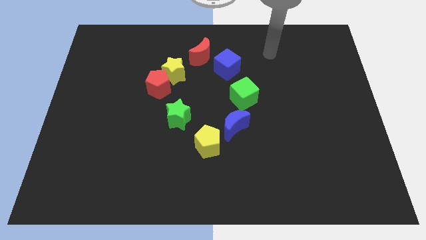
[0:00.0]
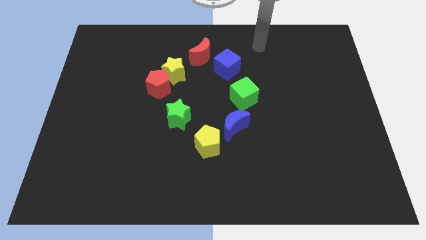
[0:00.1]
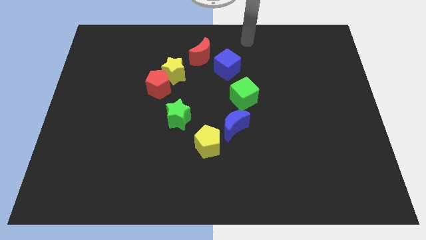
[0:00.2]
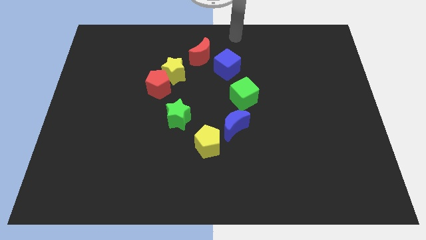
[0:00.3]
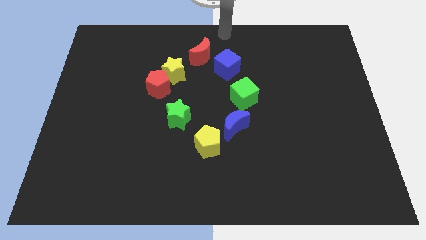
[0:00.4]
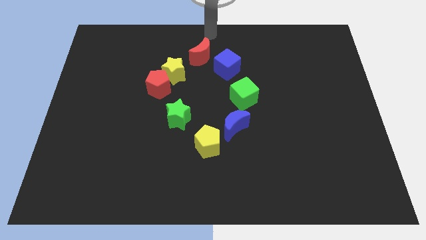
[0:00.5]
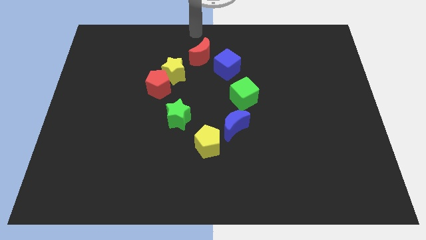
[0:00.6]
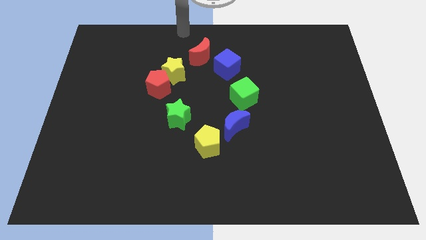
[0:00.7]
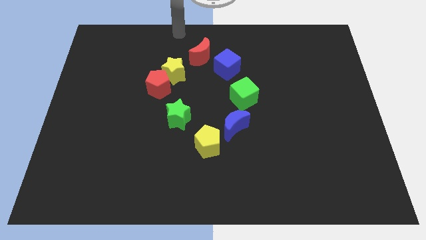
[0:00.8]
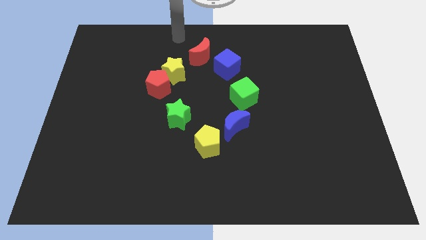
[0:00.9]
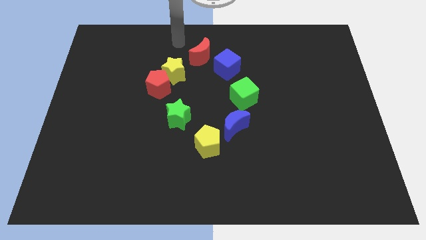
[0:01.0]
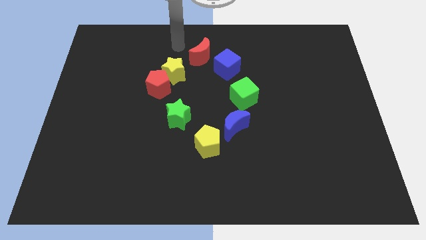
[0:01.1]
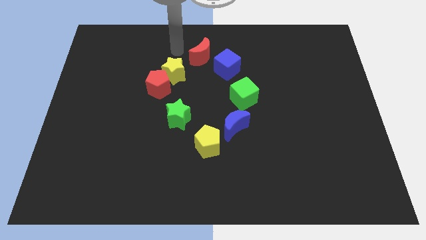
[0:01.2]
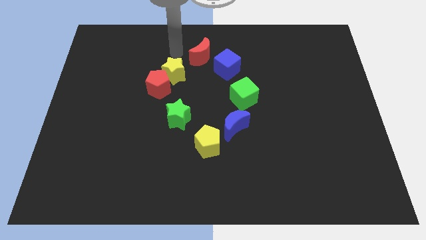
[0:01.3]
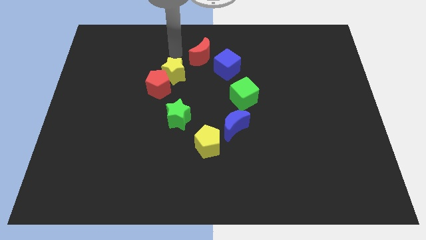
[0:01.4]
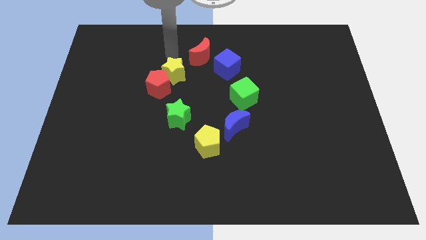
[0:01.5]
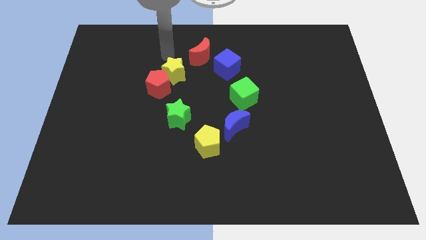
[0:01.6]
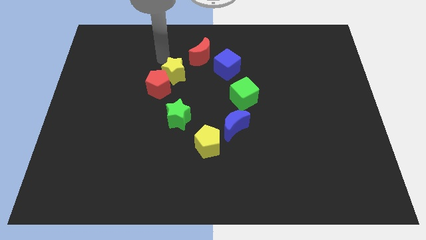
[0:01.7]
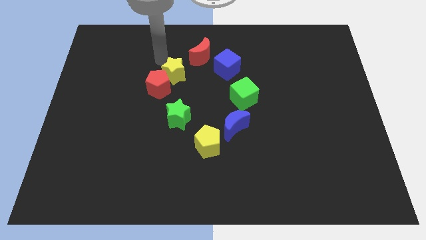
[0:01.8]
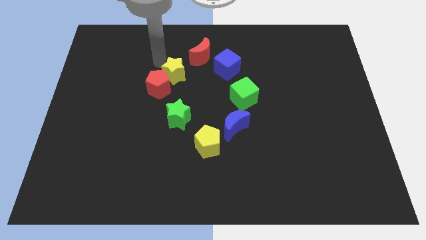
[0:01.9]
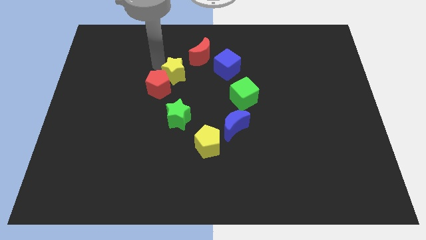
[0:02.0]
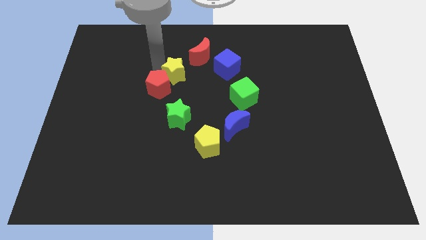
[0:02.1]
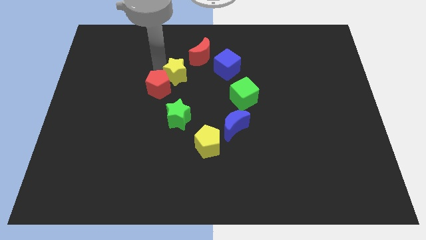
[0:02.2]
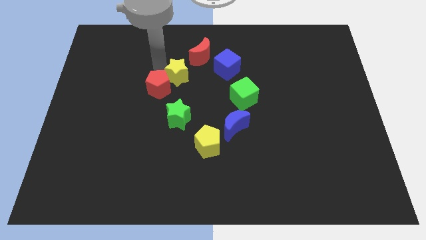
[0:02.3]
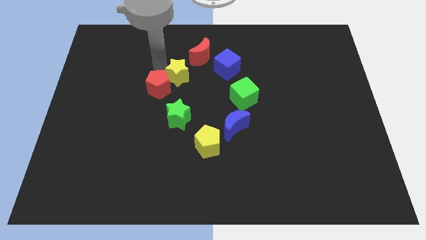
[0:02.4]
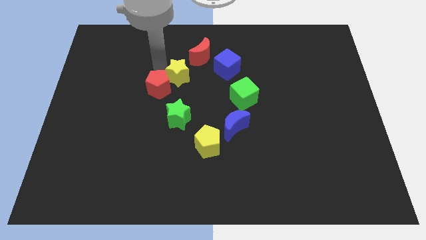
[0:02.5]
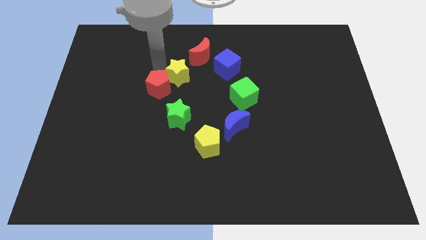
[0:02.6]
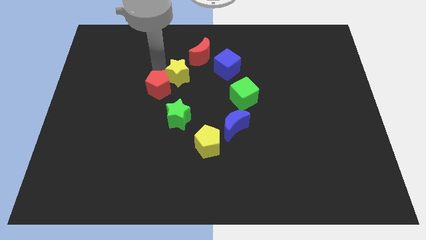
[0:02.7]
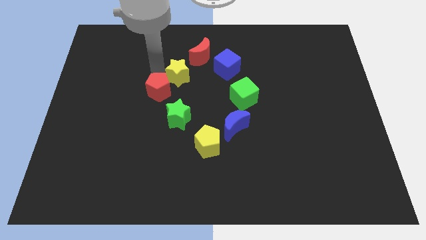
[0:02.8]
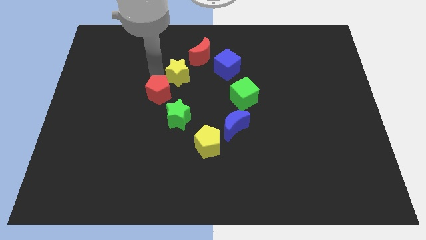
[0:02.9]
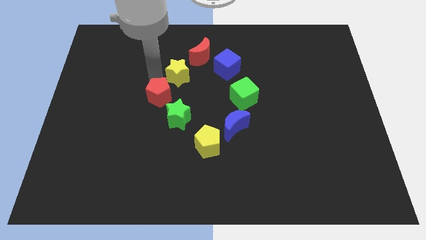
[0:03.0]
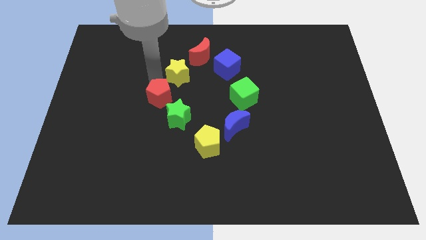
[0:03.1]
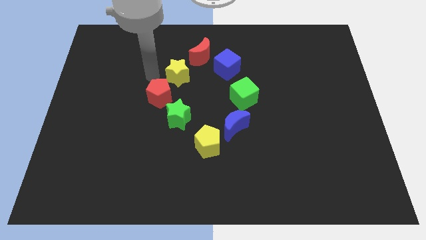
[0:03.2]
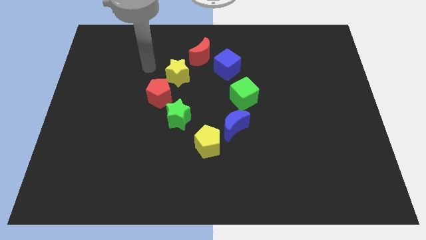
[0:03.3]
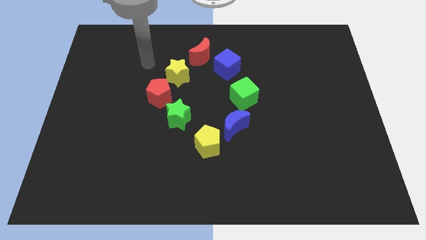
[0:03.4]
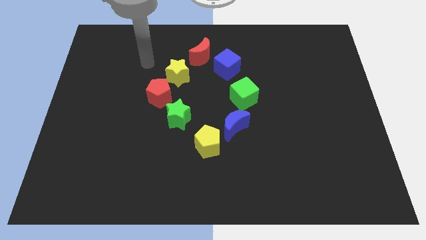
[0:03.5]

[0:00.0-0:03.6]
adjust the yellow star and the red pentagon to the center of the board

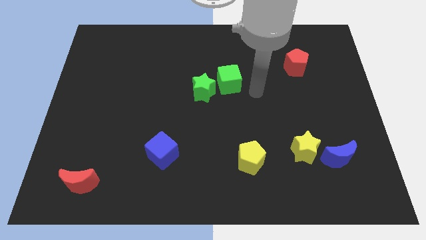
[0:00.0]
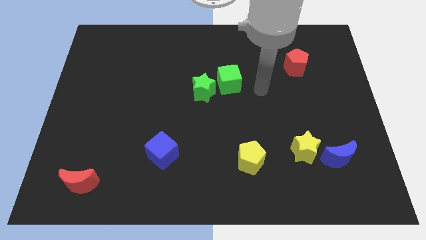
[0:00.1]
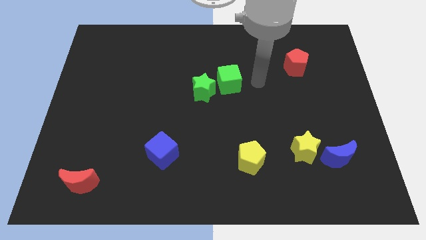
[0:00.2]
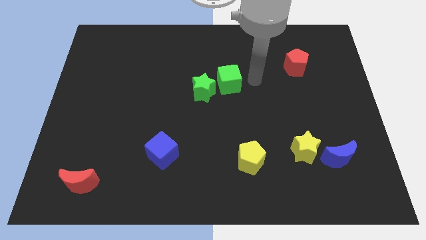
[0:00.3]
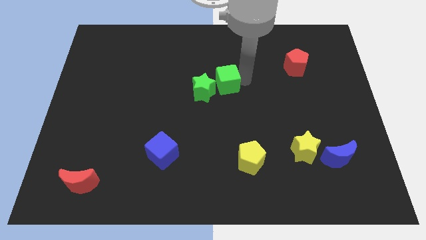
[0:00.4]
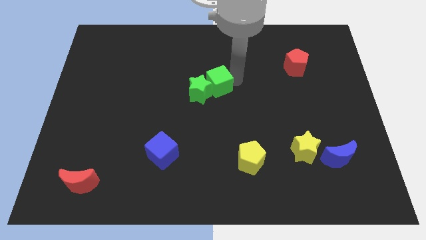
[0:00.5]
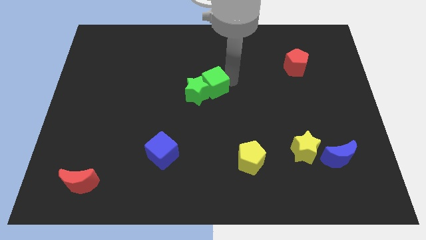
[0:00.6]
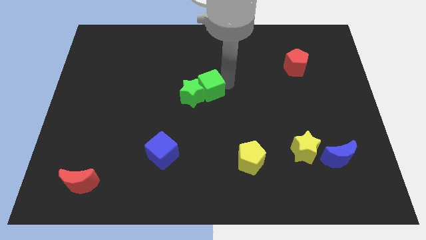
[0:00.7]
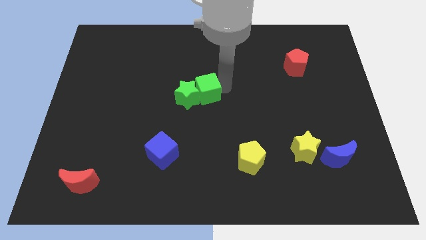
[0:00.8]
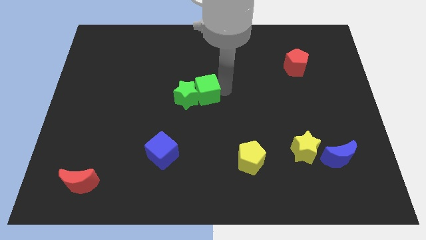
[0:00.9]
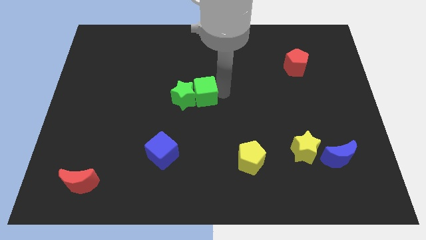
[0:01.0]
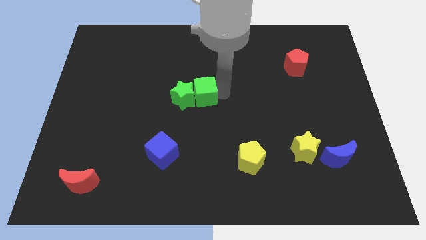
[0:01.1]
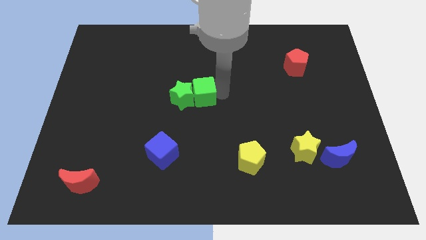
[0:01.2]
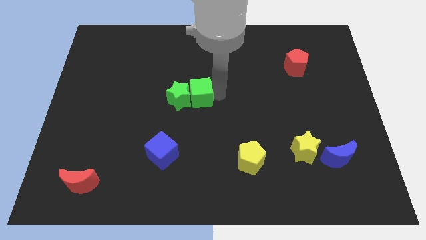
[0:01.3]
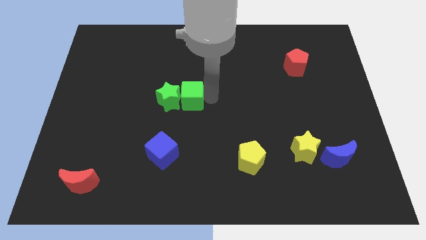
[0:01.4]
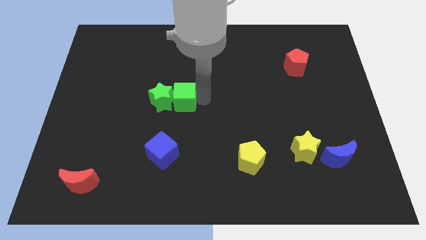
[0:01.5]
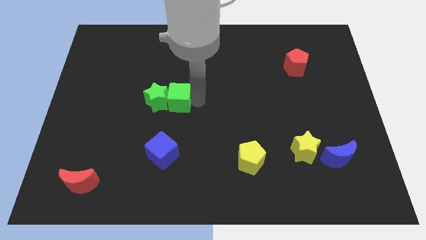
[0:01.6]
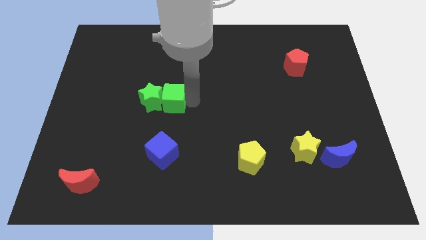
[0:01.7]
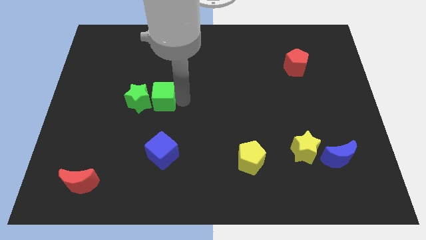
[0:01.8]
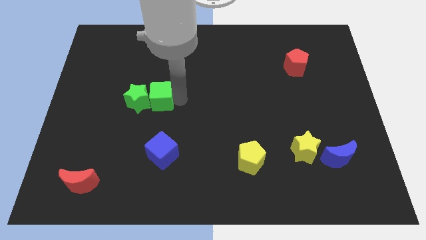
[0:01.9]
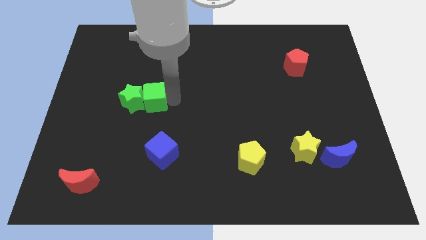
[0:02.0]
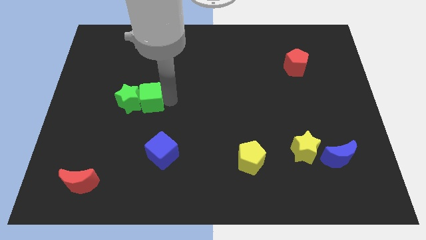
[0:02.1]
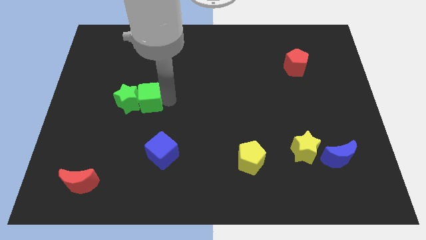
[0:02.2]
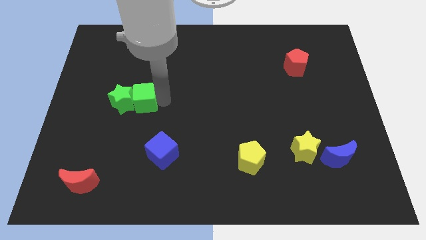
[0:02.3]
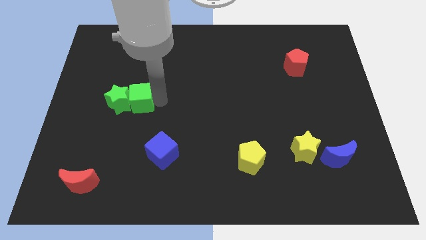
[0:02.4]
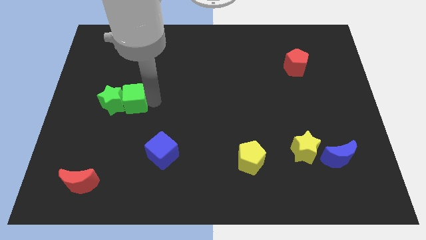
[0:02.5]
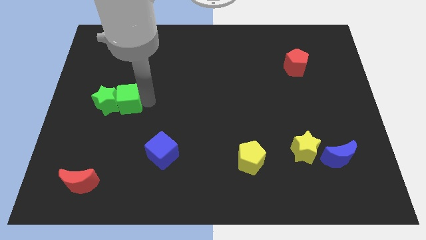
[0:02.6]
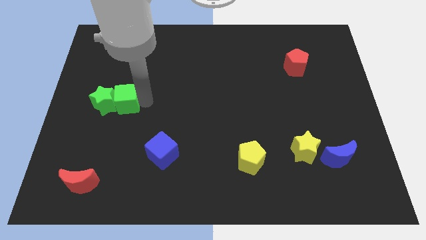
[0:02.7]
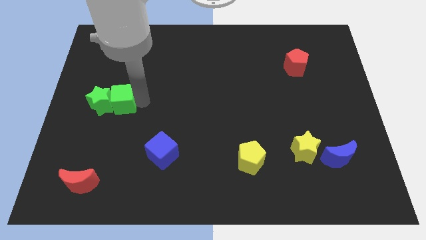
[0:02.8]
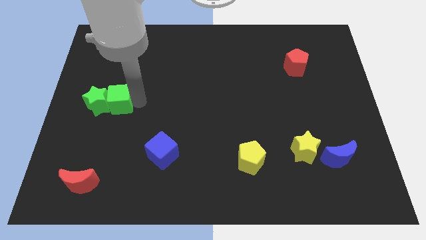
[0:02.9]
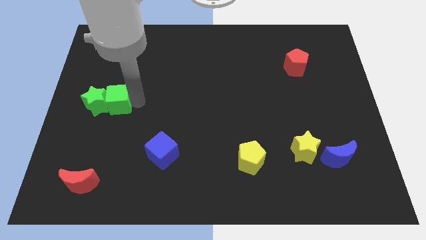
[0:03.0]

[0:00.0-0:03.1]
slide the blue object towards the center left of the table

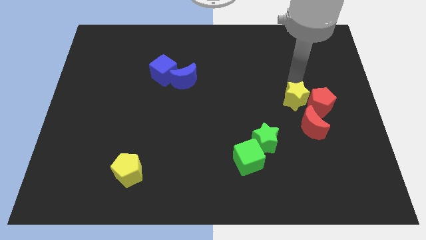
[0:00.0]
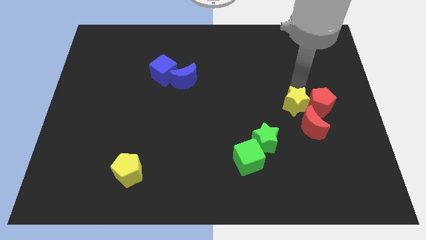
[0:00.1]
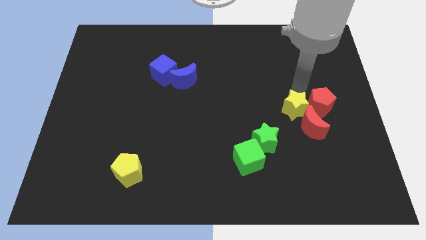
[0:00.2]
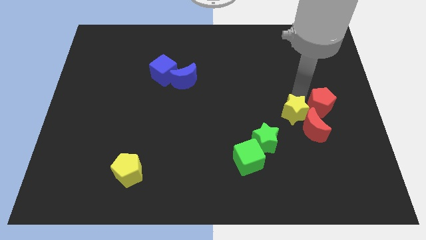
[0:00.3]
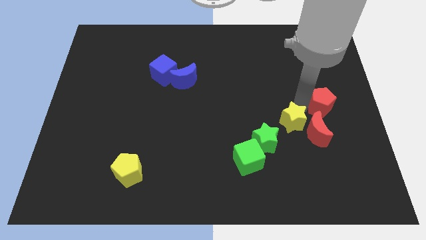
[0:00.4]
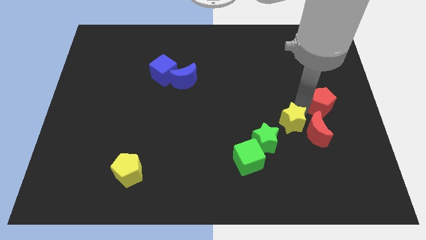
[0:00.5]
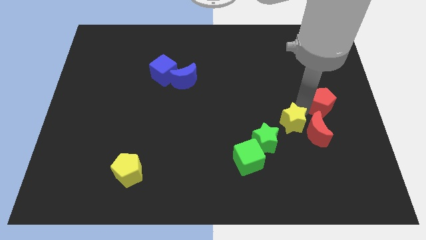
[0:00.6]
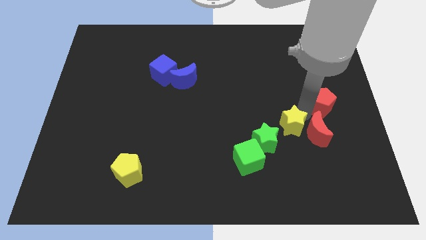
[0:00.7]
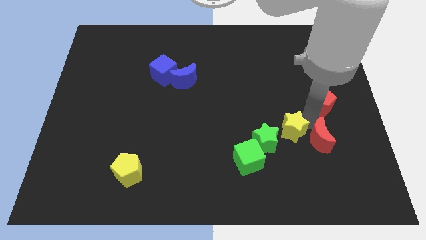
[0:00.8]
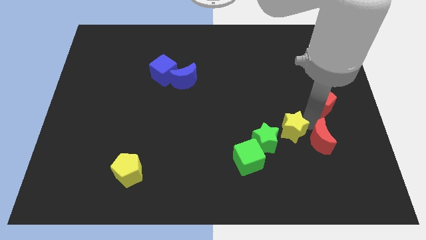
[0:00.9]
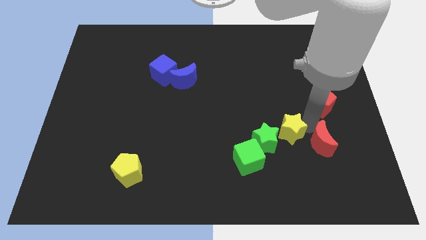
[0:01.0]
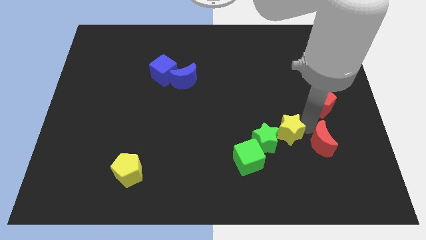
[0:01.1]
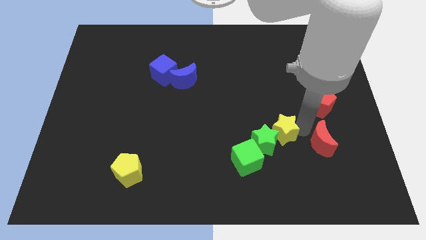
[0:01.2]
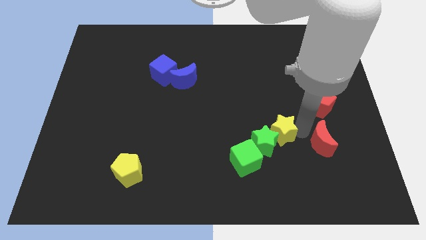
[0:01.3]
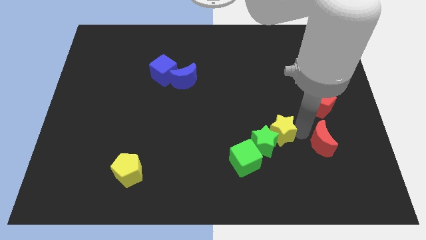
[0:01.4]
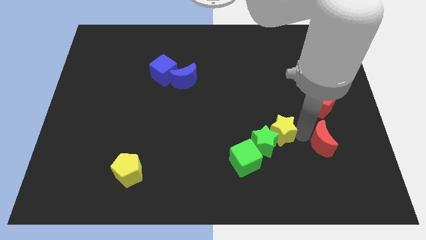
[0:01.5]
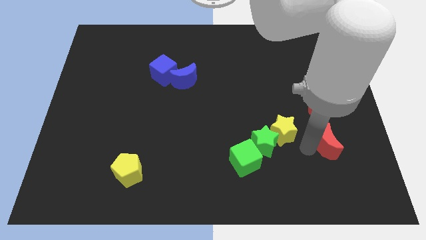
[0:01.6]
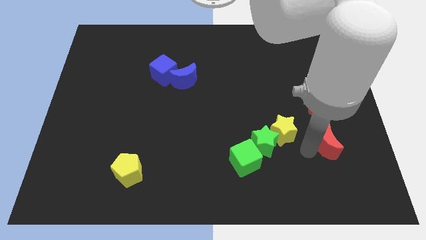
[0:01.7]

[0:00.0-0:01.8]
move the yellow star to the top right side of the green star

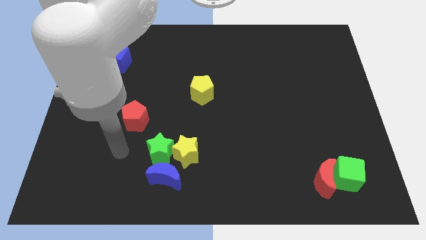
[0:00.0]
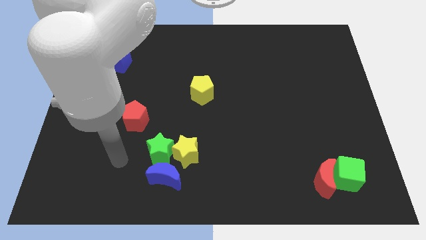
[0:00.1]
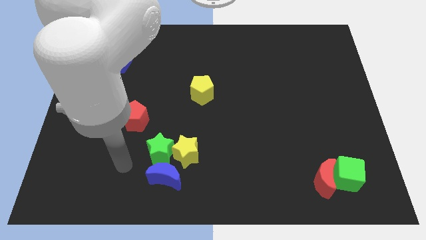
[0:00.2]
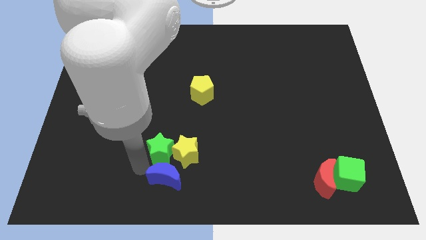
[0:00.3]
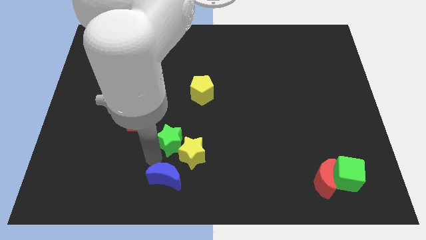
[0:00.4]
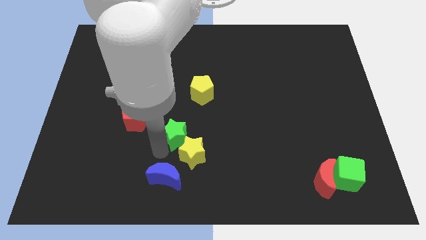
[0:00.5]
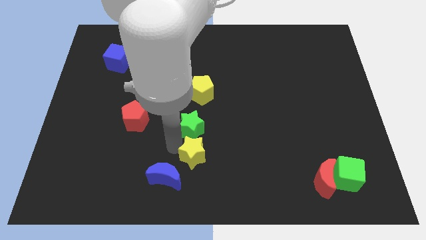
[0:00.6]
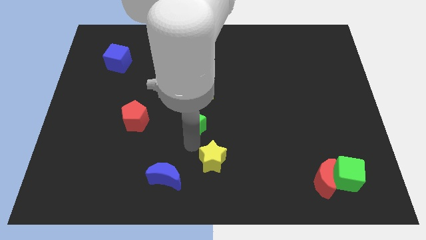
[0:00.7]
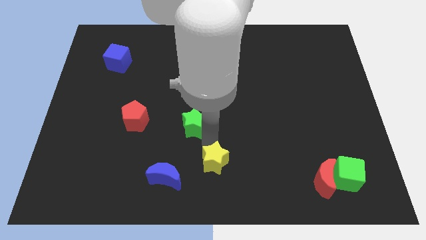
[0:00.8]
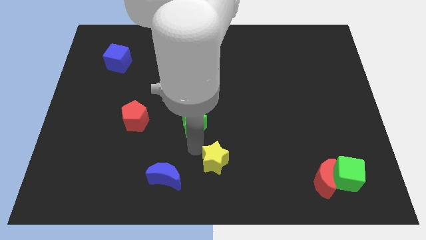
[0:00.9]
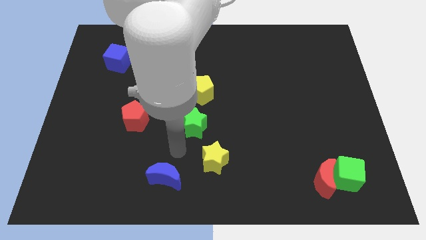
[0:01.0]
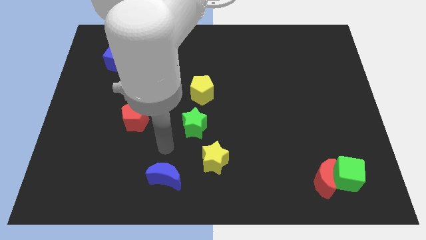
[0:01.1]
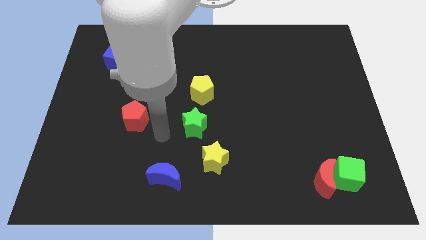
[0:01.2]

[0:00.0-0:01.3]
move the green star vertically yellow pentagon
